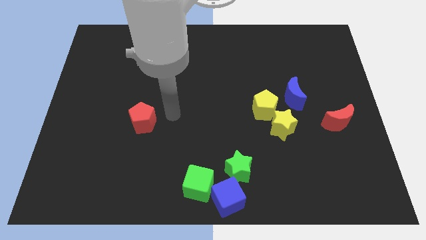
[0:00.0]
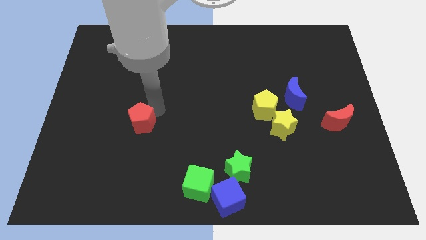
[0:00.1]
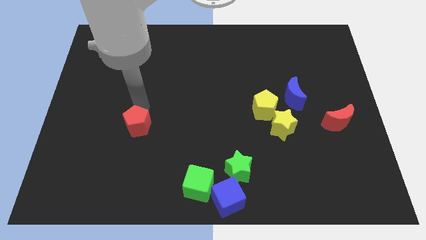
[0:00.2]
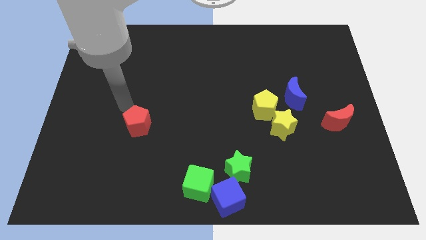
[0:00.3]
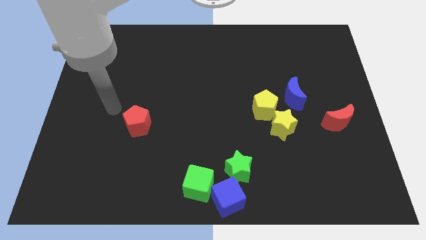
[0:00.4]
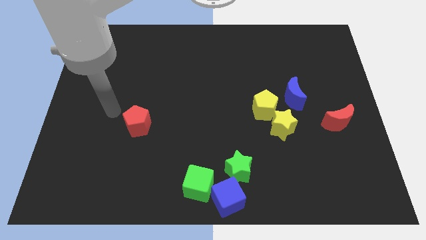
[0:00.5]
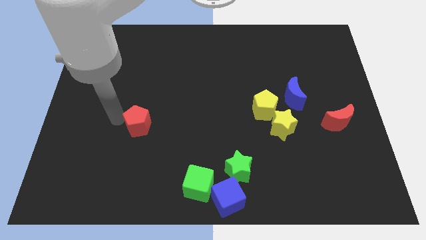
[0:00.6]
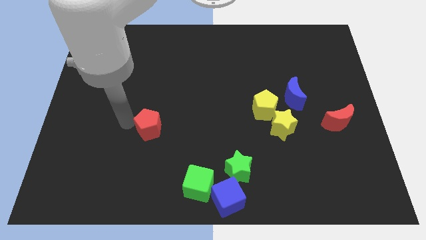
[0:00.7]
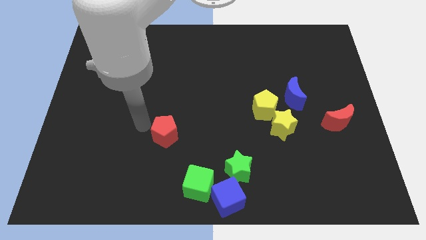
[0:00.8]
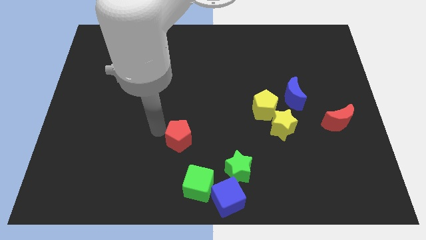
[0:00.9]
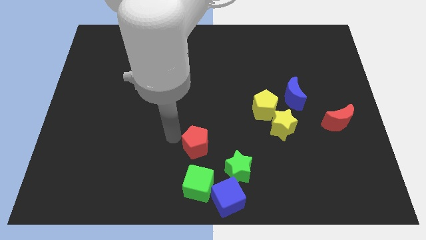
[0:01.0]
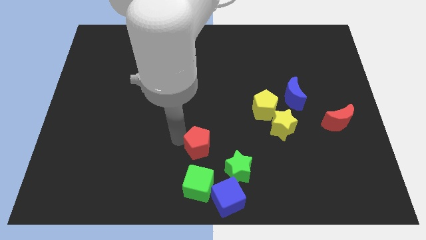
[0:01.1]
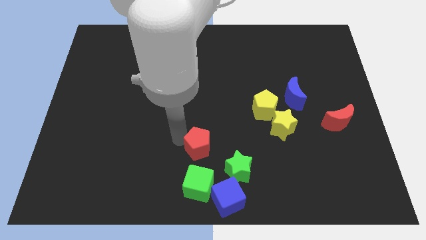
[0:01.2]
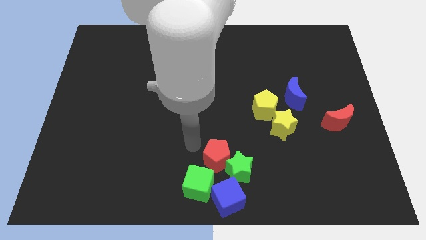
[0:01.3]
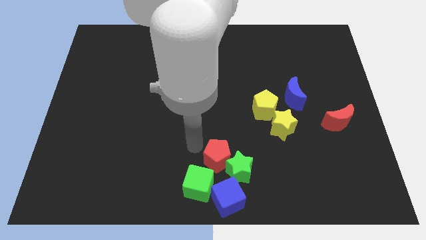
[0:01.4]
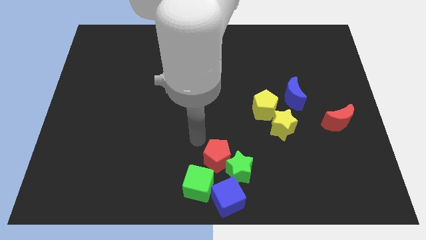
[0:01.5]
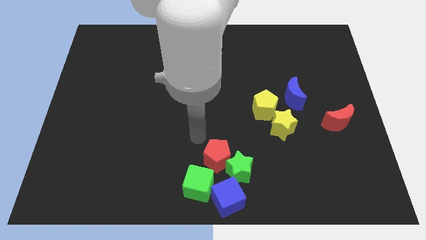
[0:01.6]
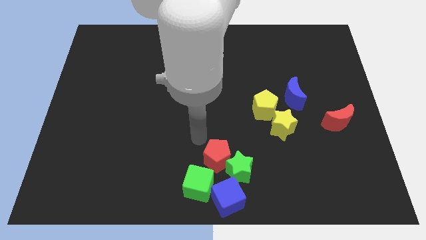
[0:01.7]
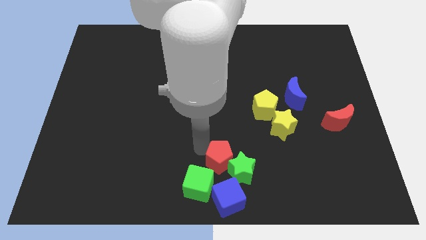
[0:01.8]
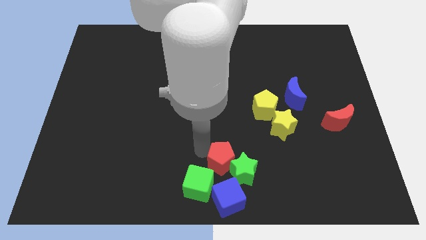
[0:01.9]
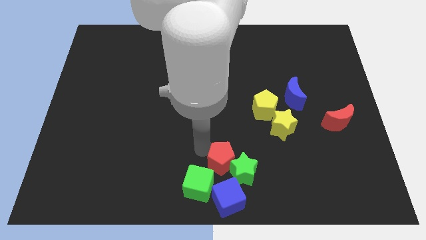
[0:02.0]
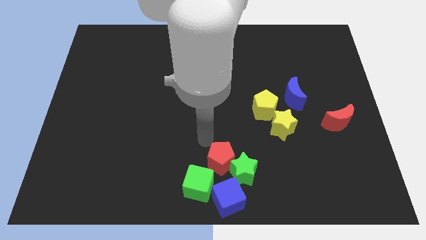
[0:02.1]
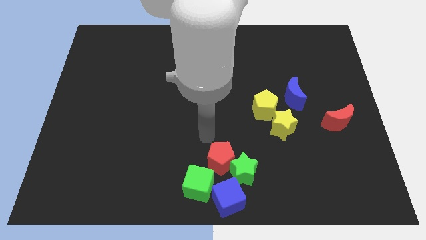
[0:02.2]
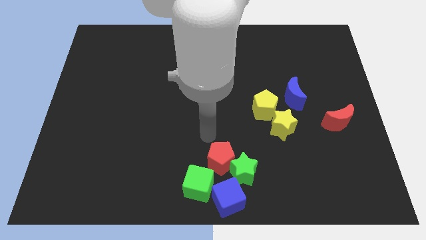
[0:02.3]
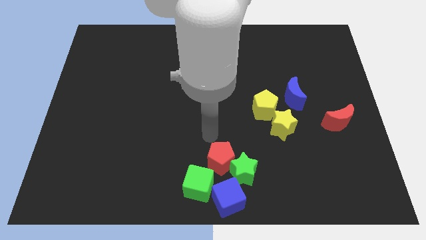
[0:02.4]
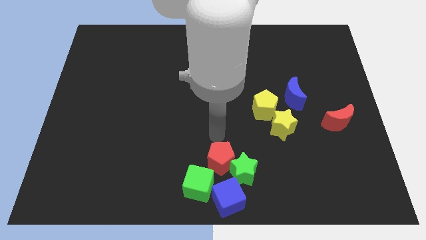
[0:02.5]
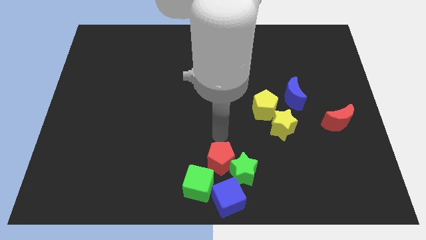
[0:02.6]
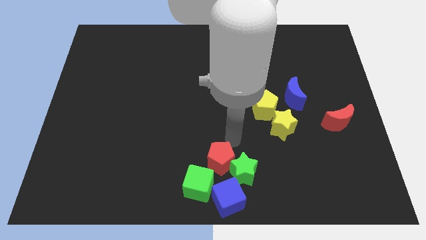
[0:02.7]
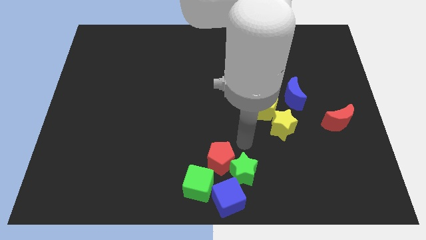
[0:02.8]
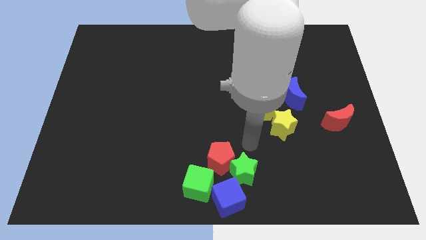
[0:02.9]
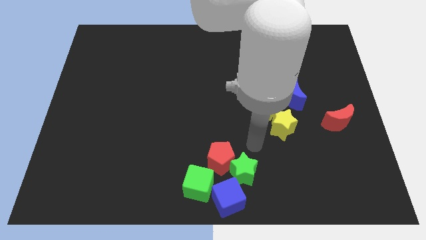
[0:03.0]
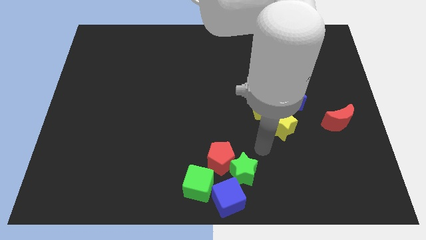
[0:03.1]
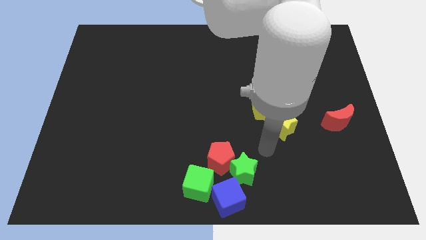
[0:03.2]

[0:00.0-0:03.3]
push the red pentagon to the top of the green cube

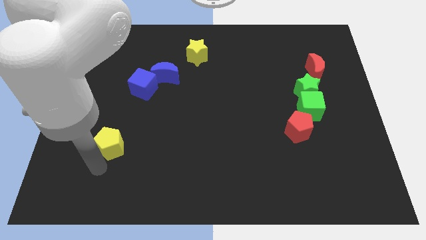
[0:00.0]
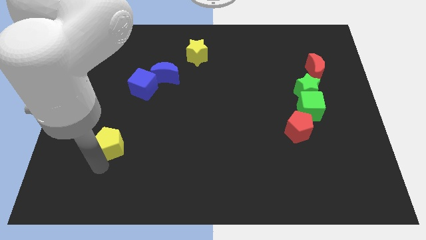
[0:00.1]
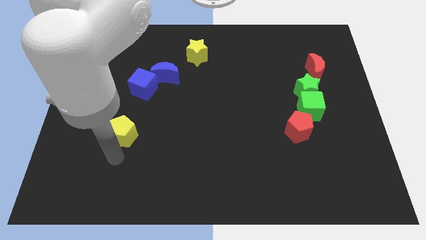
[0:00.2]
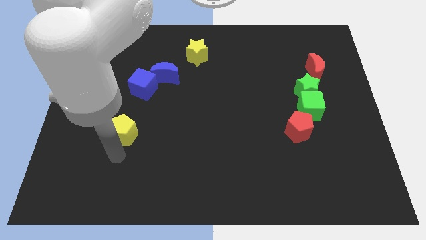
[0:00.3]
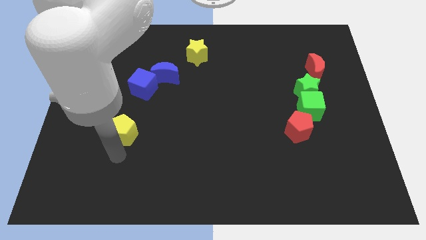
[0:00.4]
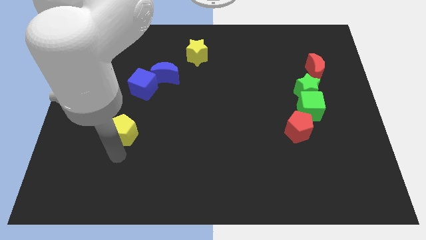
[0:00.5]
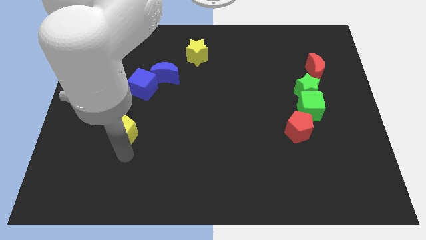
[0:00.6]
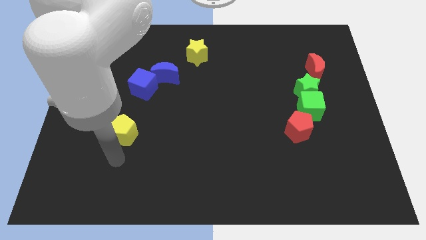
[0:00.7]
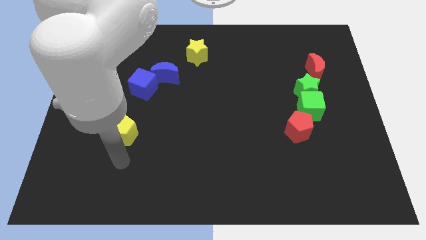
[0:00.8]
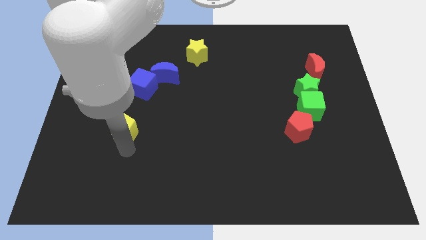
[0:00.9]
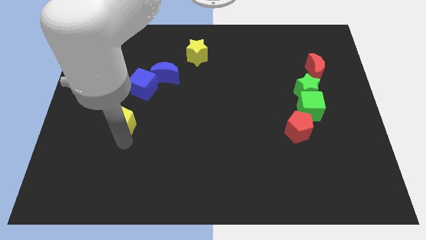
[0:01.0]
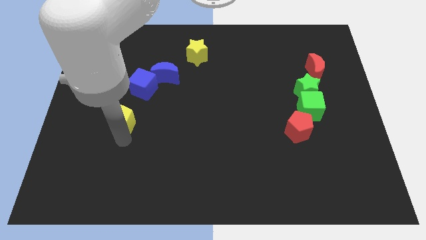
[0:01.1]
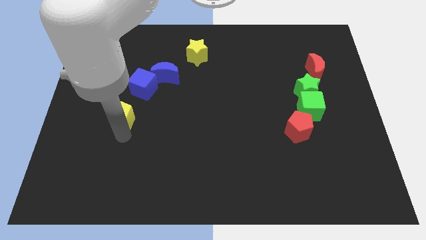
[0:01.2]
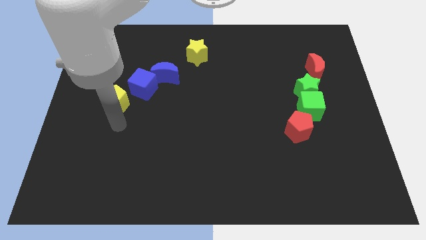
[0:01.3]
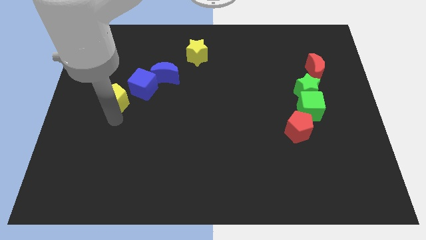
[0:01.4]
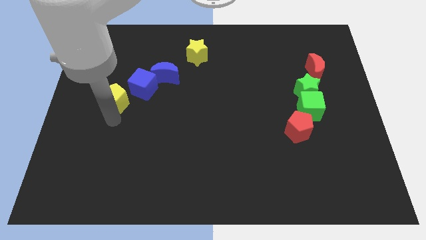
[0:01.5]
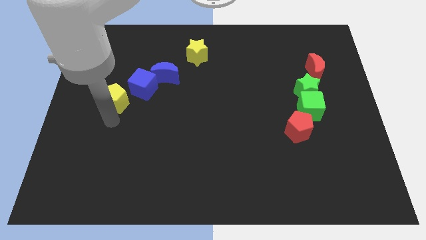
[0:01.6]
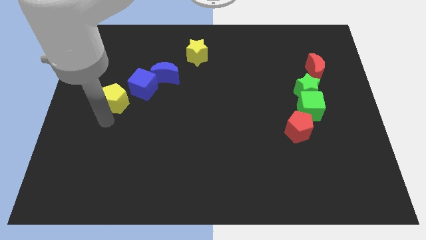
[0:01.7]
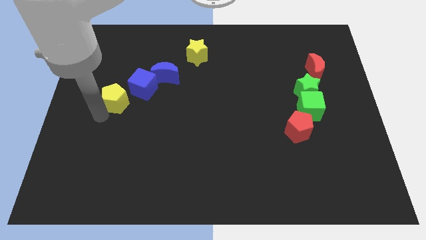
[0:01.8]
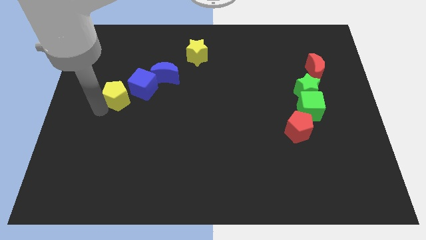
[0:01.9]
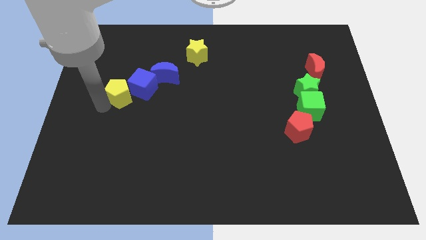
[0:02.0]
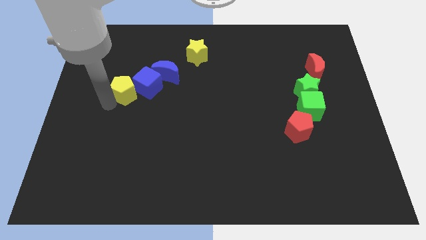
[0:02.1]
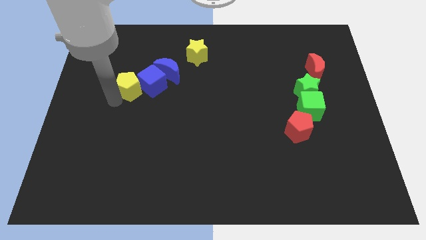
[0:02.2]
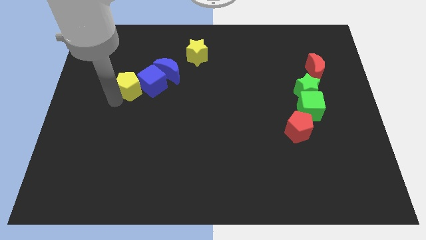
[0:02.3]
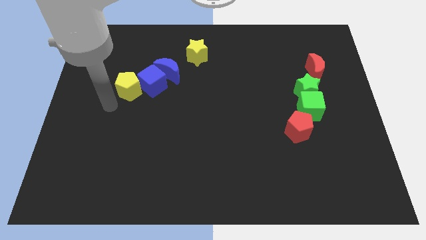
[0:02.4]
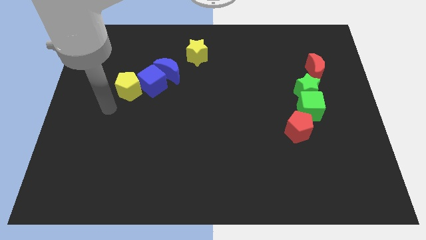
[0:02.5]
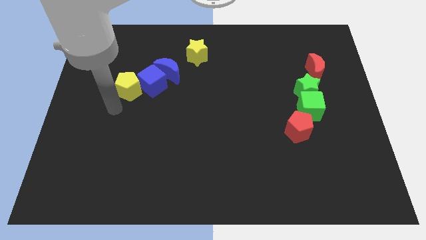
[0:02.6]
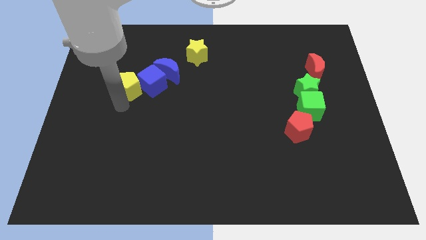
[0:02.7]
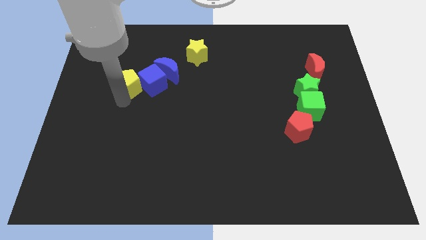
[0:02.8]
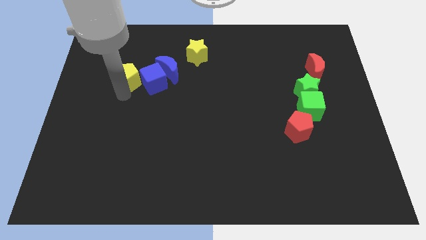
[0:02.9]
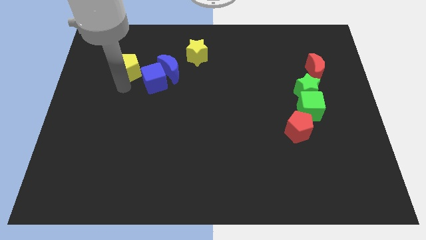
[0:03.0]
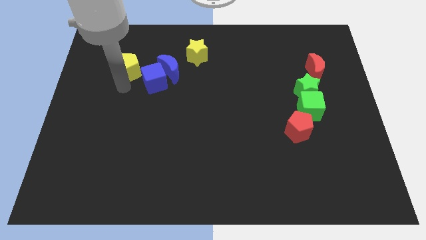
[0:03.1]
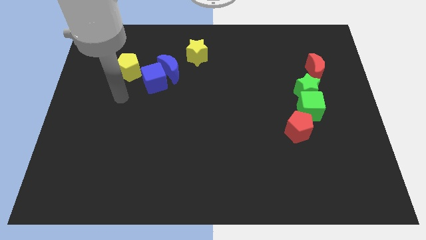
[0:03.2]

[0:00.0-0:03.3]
push the yellow pentagon into the blue blocks

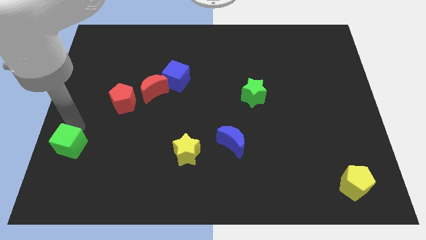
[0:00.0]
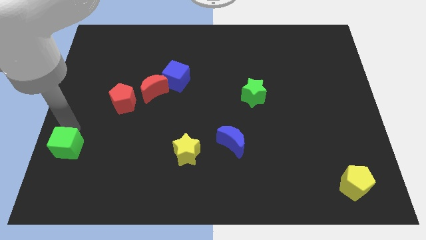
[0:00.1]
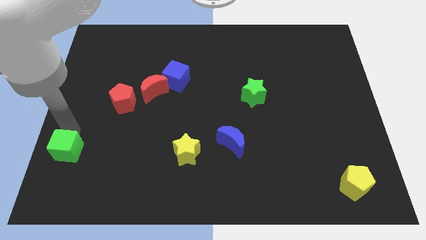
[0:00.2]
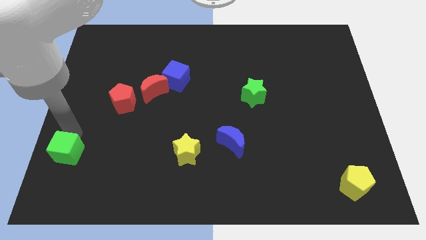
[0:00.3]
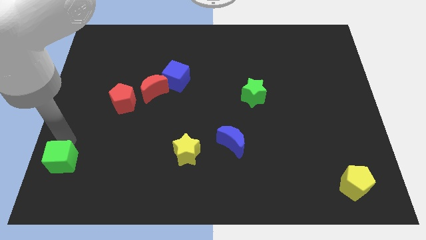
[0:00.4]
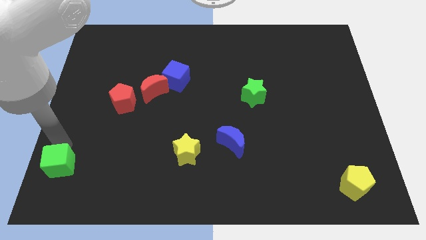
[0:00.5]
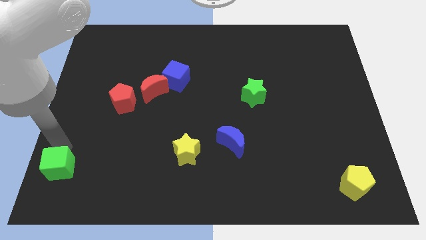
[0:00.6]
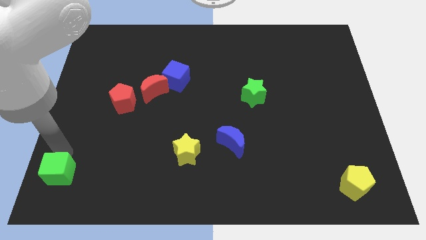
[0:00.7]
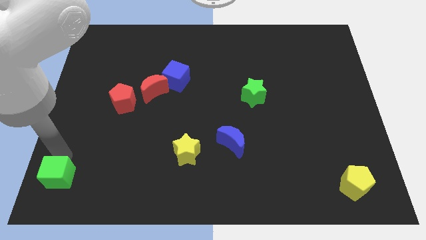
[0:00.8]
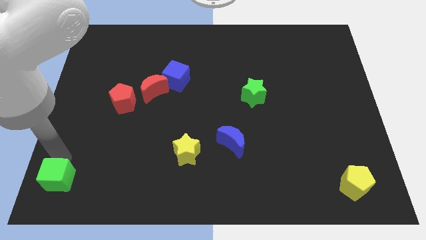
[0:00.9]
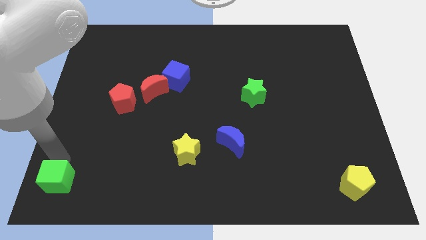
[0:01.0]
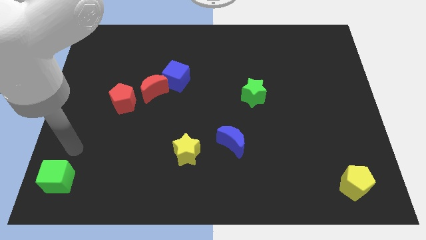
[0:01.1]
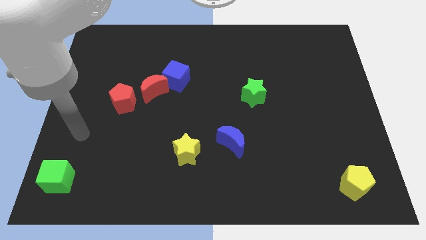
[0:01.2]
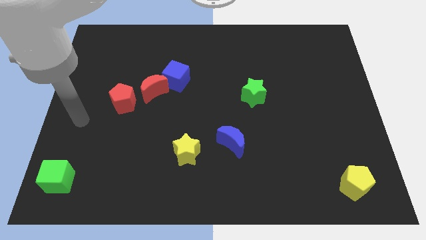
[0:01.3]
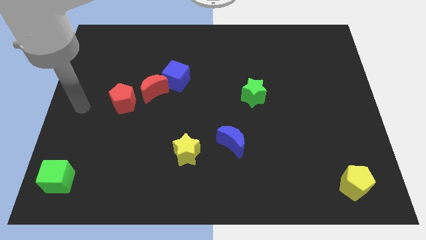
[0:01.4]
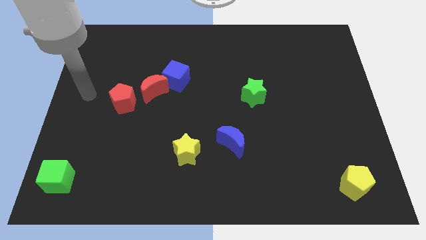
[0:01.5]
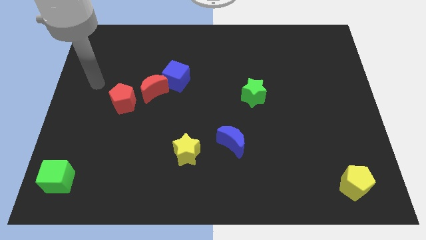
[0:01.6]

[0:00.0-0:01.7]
move green cube to the bottom left of the board

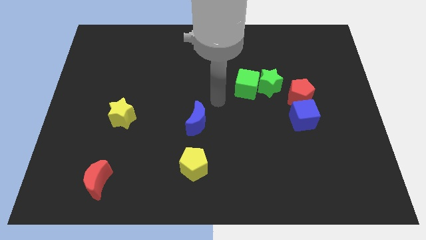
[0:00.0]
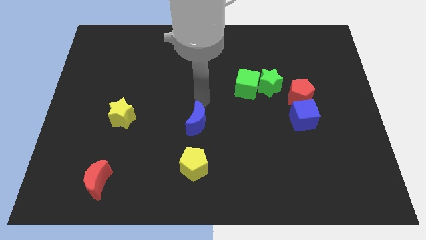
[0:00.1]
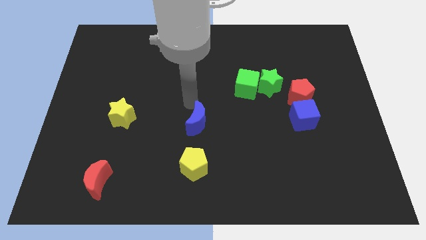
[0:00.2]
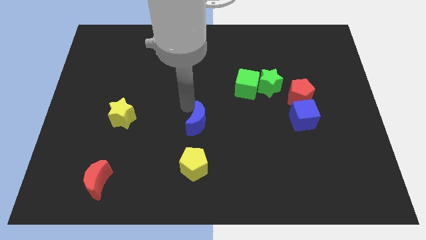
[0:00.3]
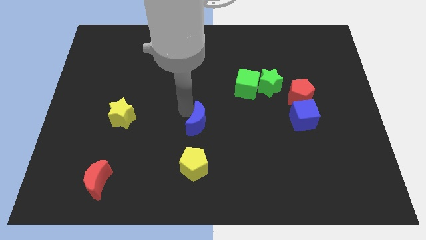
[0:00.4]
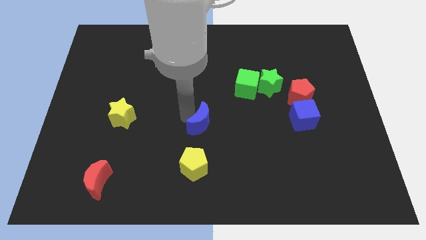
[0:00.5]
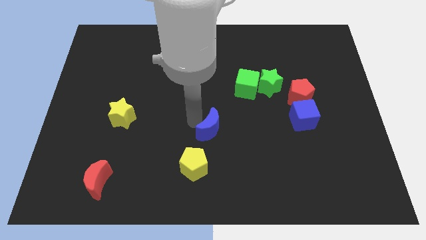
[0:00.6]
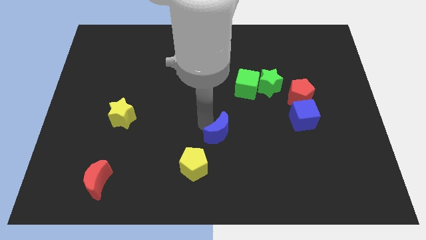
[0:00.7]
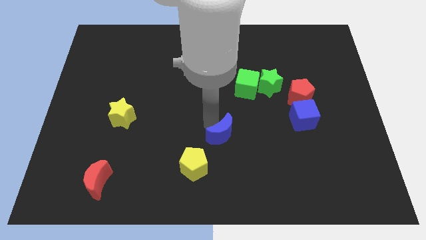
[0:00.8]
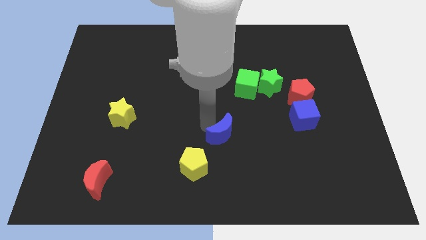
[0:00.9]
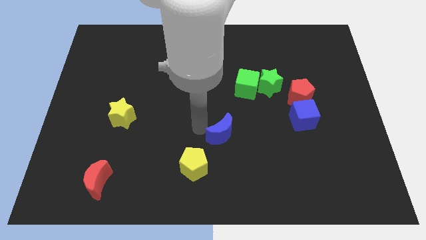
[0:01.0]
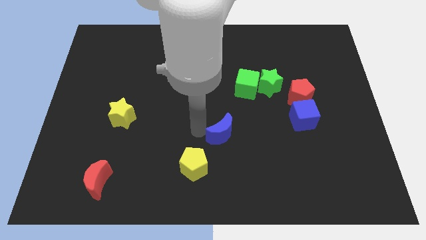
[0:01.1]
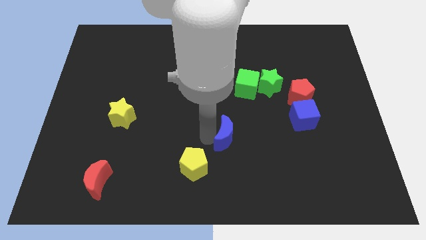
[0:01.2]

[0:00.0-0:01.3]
push the blue crescent to the top right of the yellow pentagon
